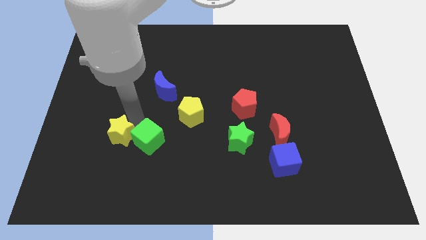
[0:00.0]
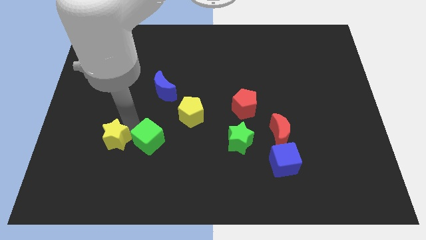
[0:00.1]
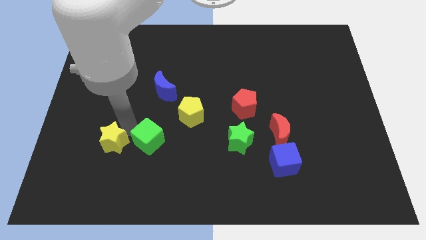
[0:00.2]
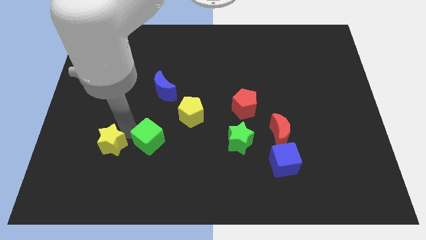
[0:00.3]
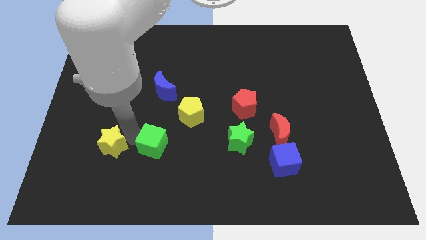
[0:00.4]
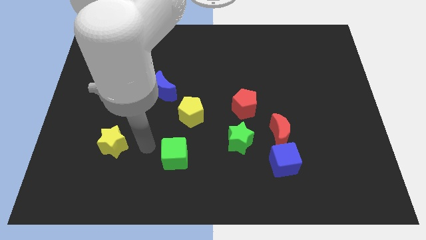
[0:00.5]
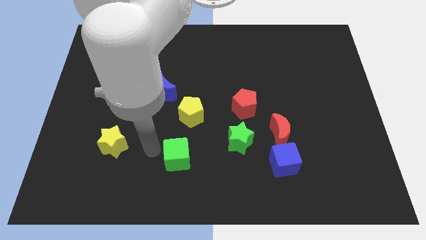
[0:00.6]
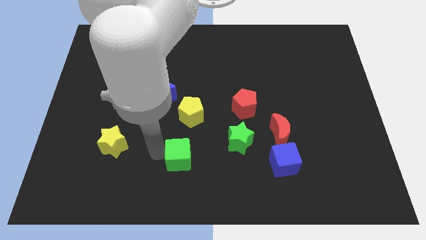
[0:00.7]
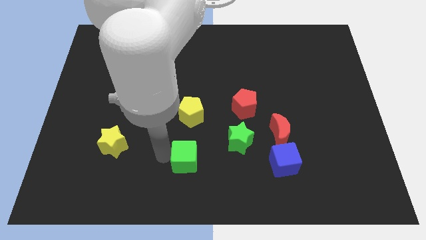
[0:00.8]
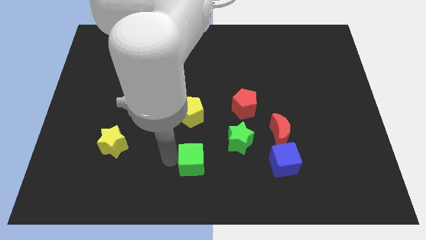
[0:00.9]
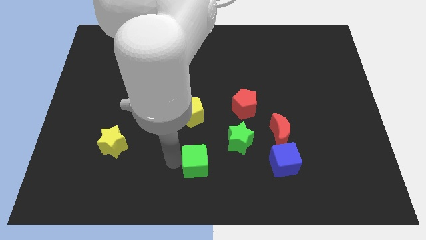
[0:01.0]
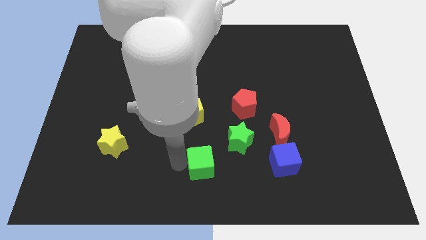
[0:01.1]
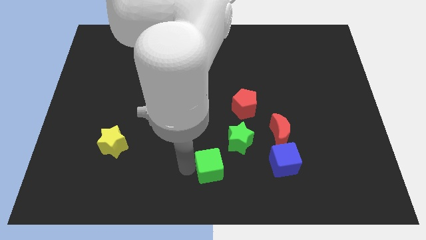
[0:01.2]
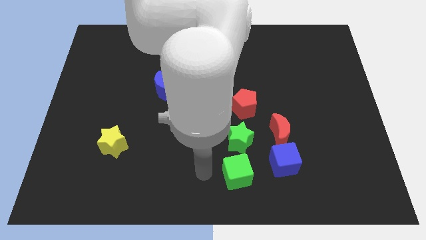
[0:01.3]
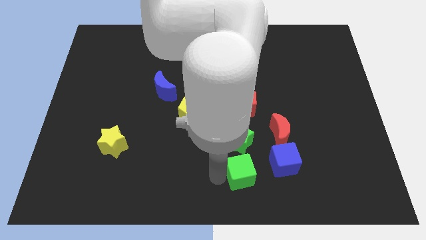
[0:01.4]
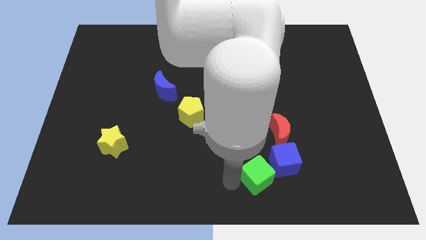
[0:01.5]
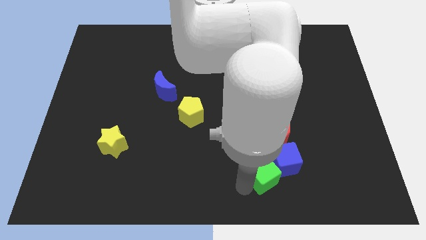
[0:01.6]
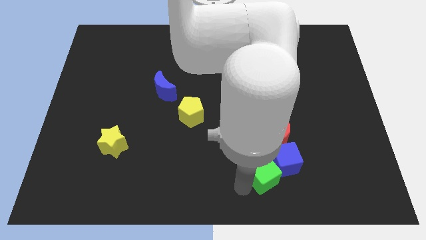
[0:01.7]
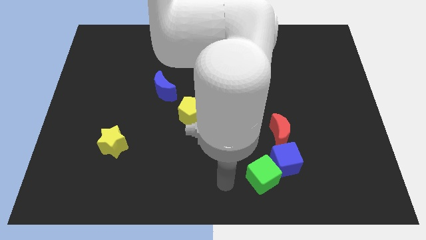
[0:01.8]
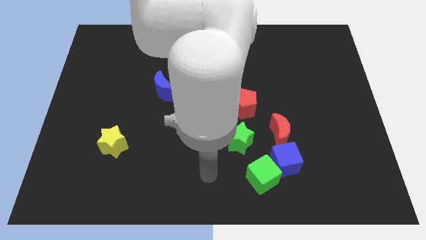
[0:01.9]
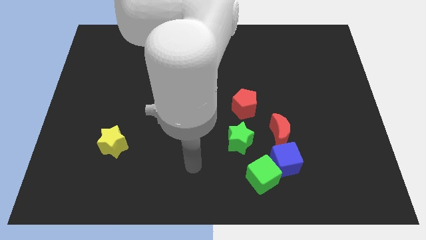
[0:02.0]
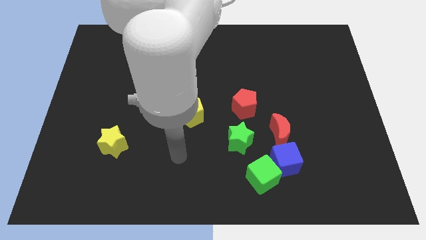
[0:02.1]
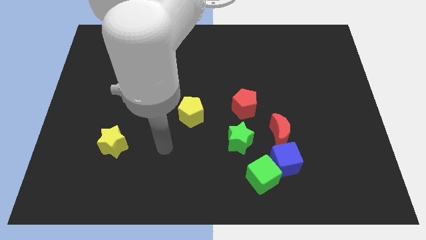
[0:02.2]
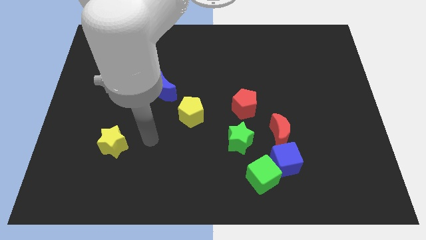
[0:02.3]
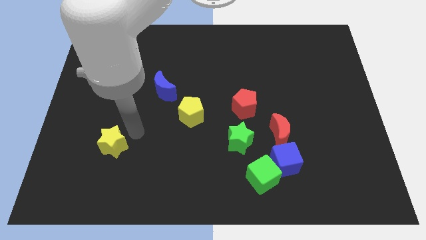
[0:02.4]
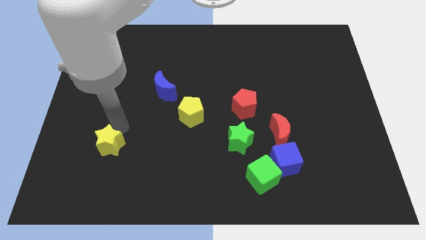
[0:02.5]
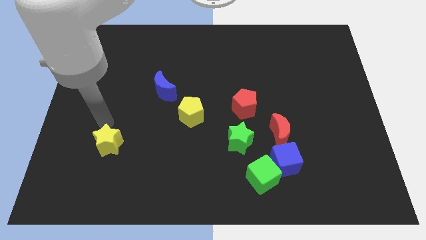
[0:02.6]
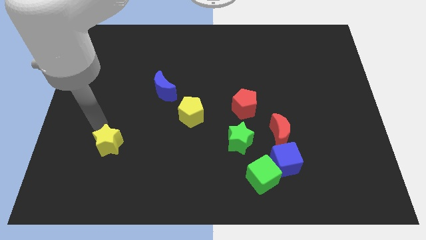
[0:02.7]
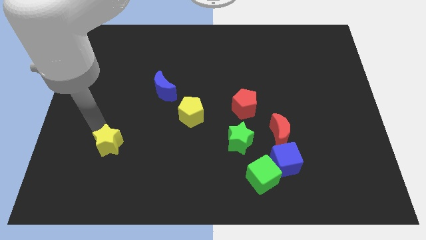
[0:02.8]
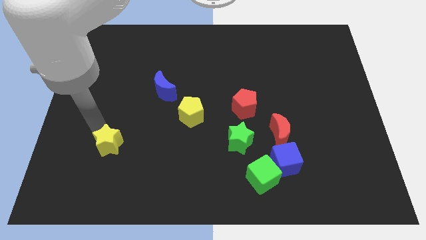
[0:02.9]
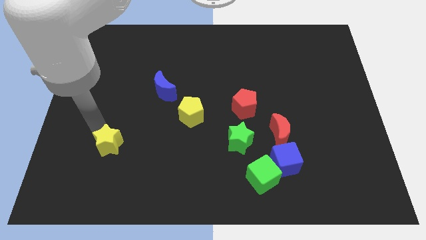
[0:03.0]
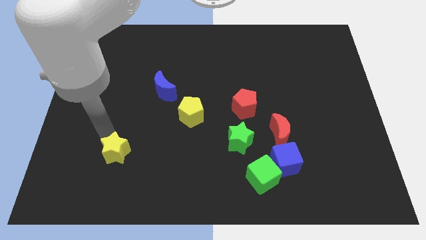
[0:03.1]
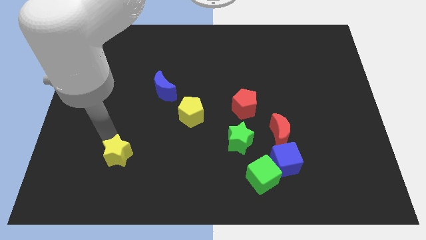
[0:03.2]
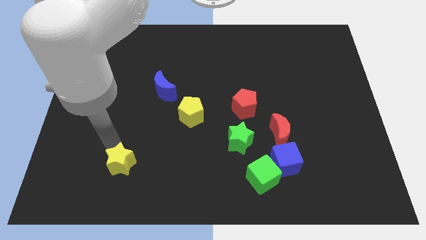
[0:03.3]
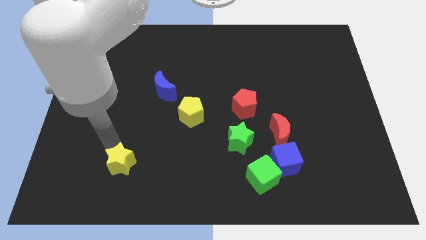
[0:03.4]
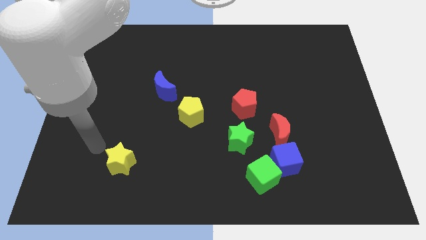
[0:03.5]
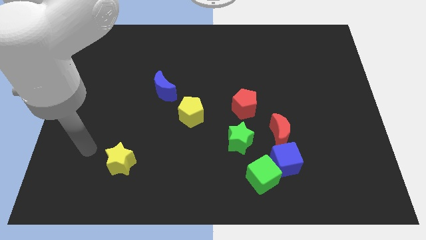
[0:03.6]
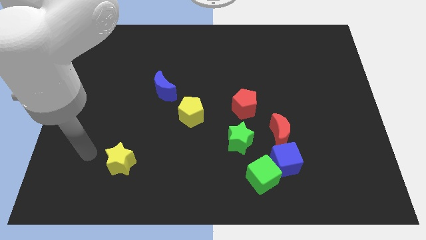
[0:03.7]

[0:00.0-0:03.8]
place the yellow star diagonal to the yellow pentagon

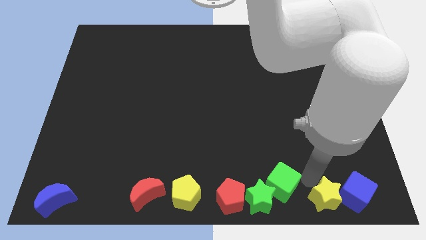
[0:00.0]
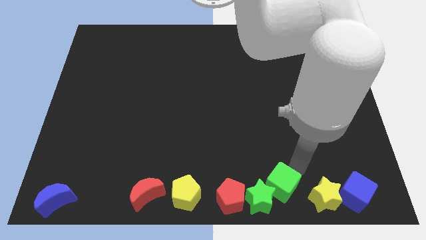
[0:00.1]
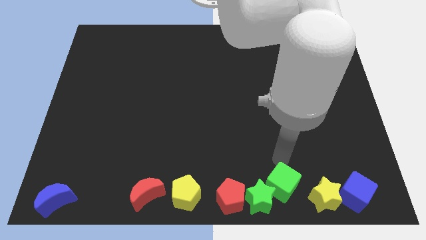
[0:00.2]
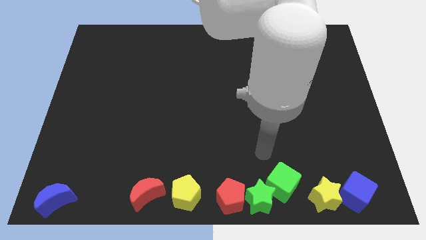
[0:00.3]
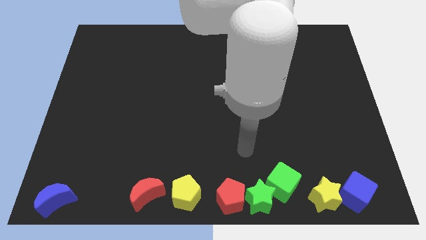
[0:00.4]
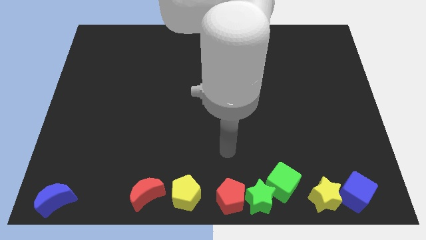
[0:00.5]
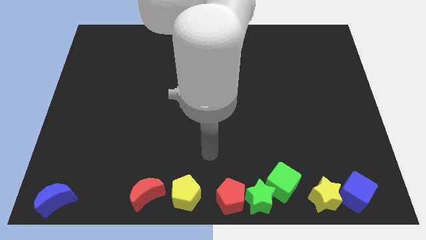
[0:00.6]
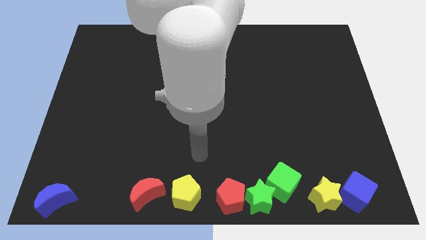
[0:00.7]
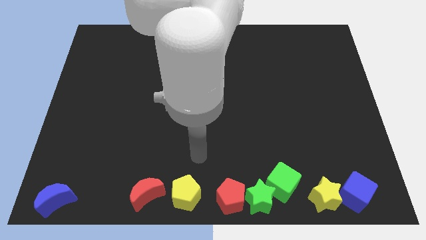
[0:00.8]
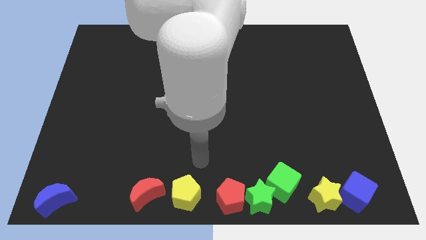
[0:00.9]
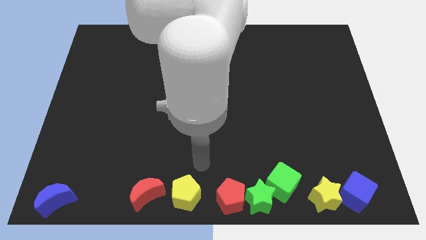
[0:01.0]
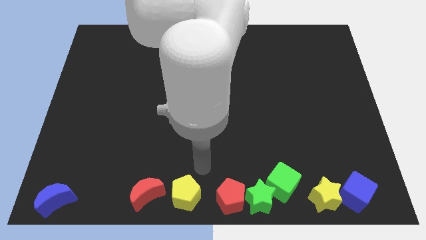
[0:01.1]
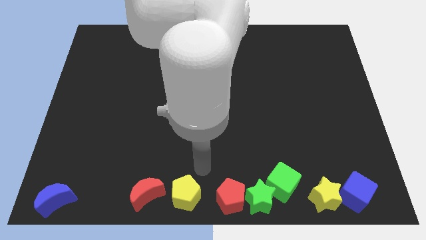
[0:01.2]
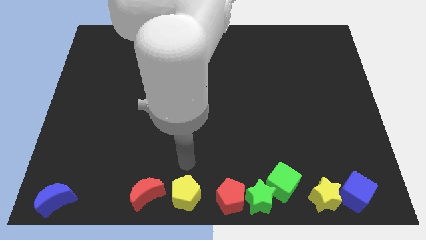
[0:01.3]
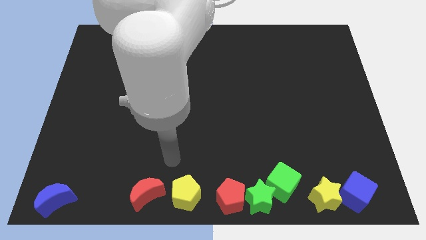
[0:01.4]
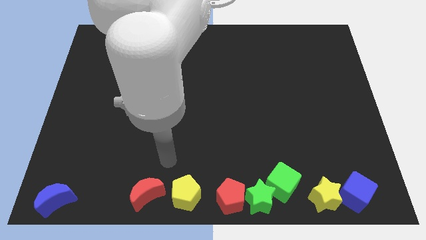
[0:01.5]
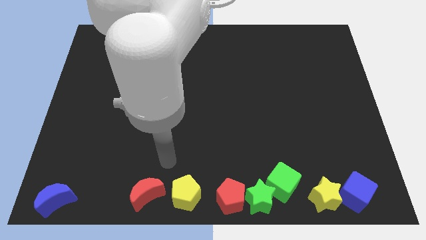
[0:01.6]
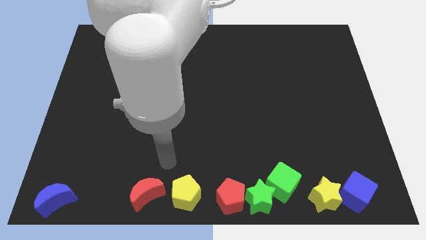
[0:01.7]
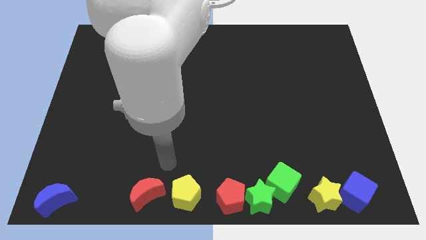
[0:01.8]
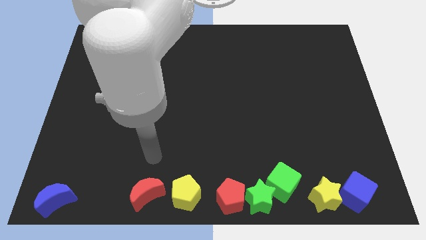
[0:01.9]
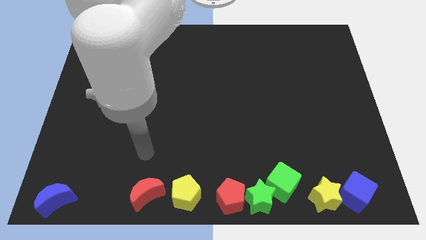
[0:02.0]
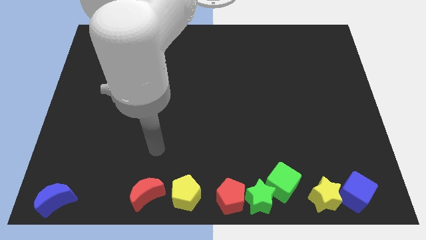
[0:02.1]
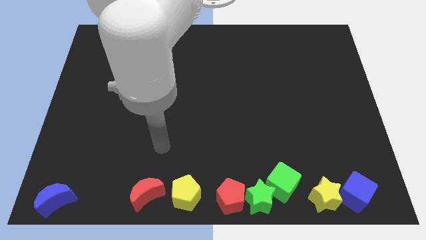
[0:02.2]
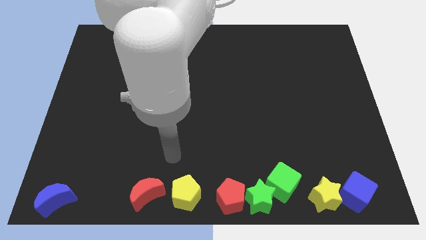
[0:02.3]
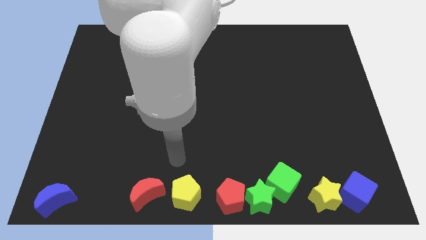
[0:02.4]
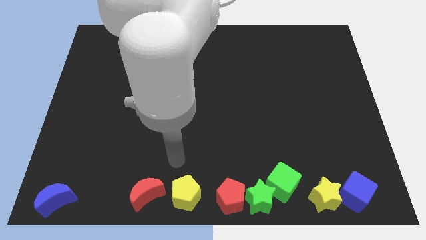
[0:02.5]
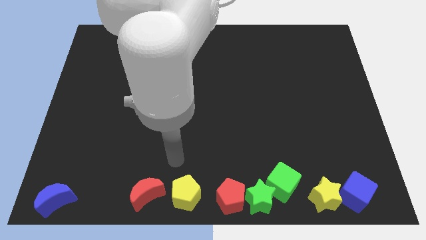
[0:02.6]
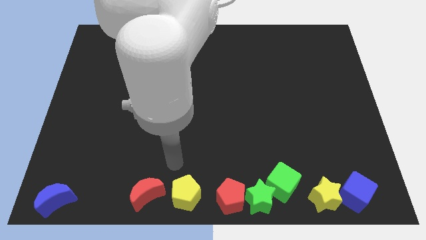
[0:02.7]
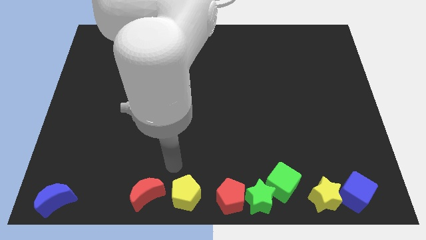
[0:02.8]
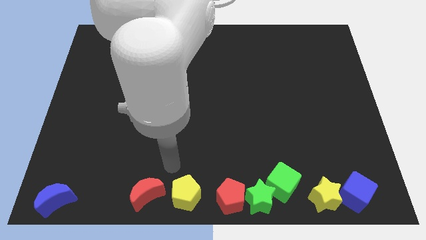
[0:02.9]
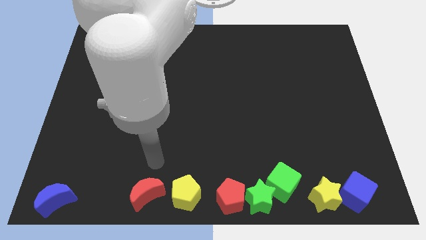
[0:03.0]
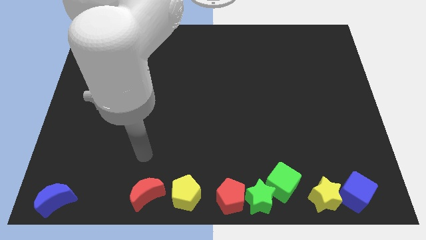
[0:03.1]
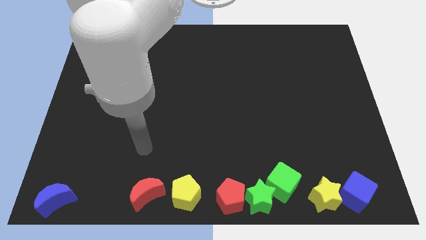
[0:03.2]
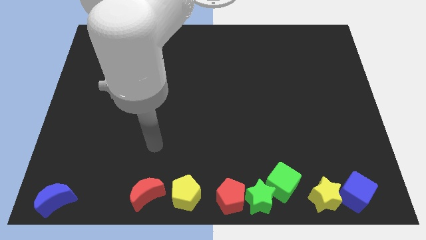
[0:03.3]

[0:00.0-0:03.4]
move your arm away from the yellow star

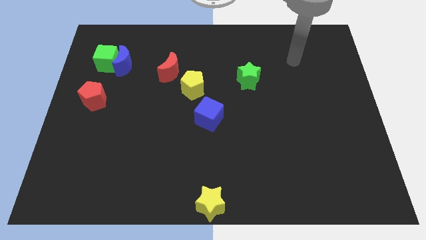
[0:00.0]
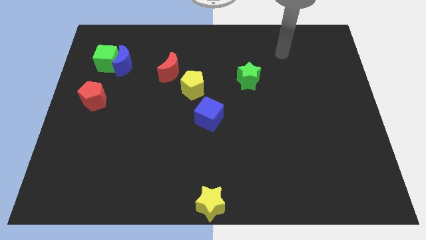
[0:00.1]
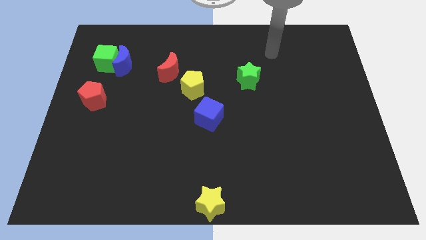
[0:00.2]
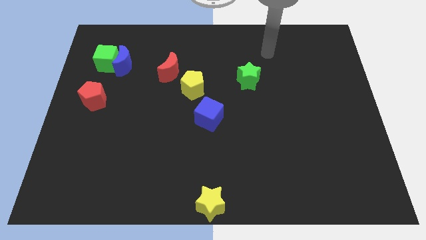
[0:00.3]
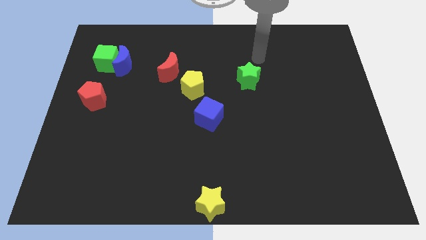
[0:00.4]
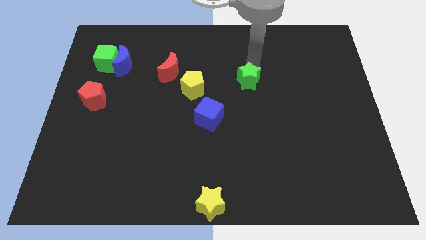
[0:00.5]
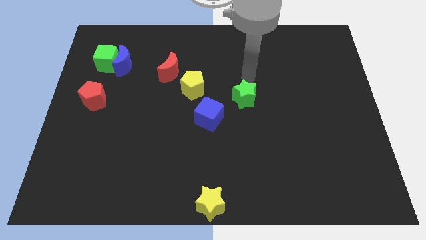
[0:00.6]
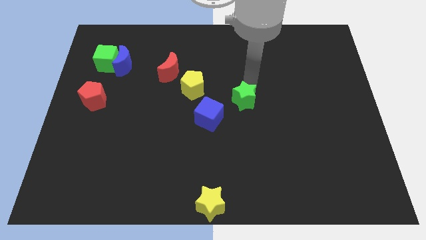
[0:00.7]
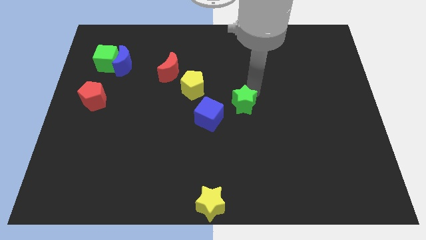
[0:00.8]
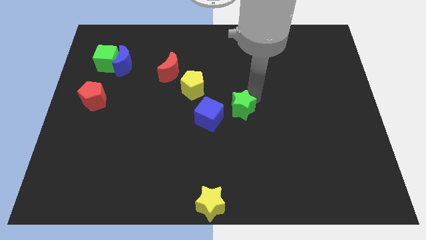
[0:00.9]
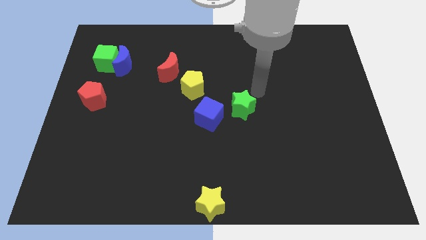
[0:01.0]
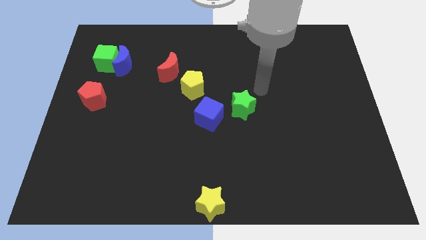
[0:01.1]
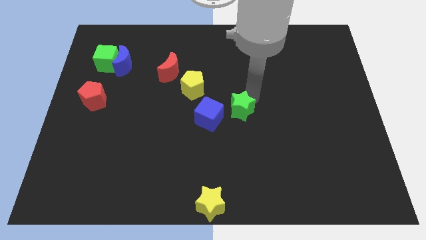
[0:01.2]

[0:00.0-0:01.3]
move the green star to the right of the blue cube

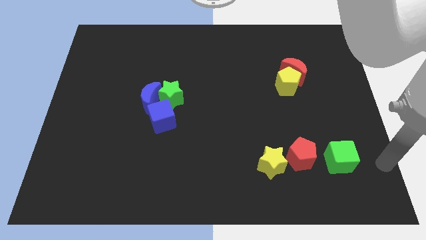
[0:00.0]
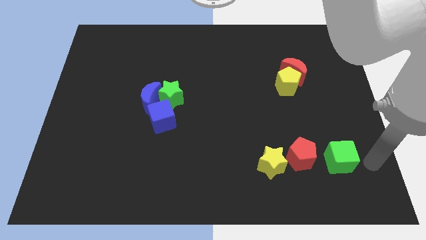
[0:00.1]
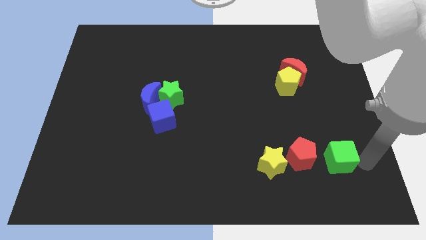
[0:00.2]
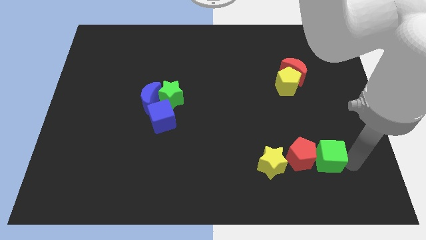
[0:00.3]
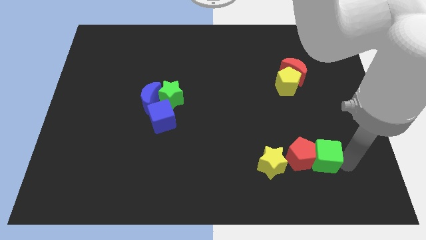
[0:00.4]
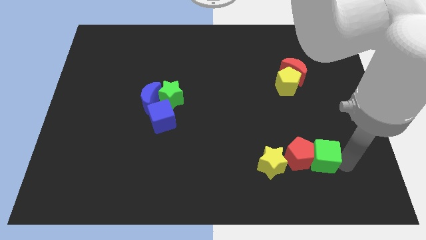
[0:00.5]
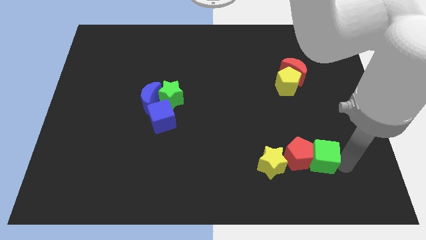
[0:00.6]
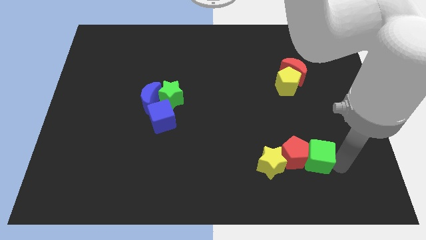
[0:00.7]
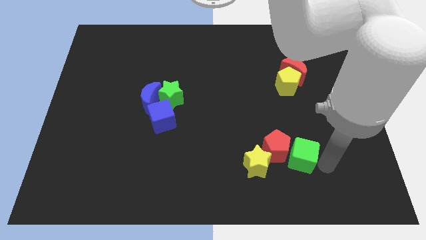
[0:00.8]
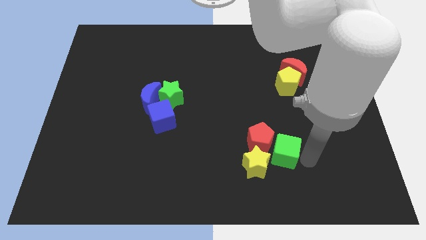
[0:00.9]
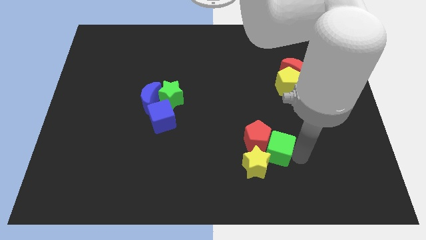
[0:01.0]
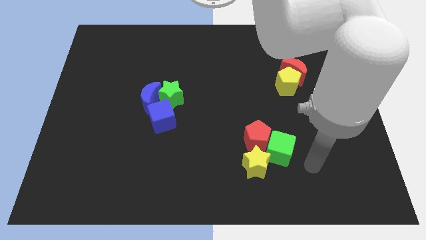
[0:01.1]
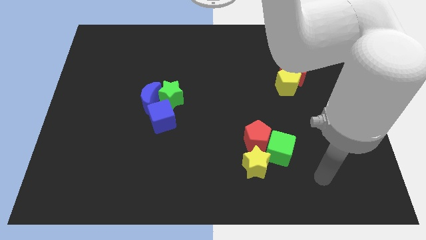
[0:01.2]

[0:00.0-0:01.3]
push the green cube into the red pentagon
